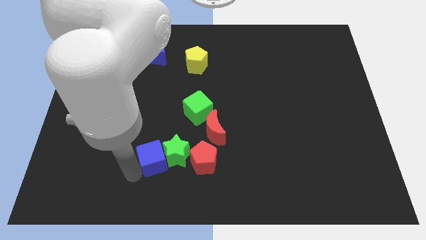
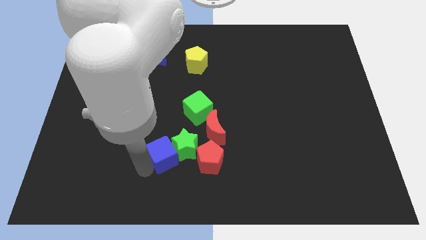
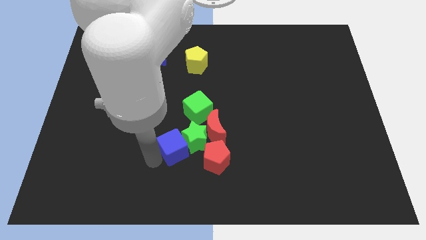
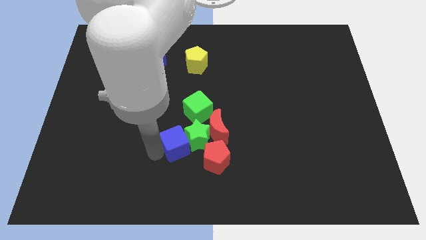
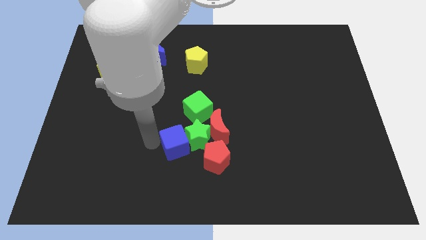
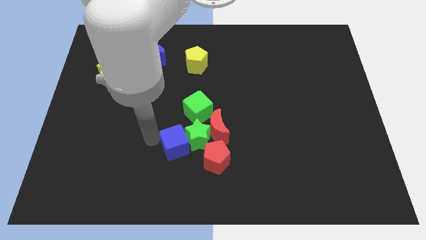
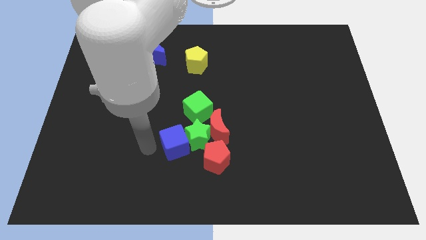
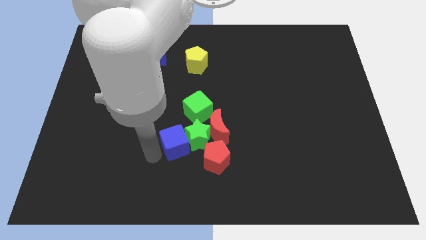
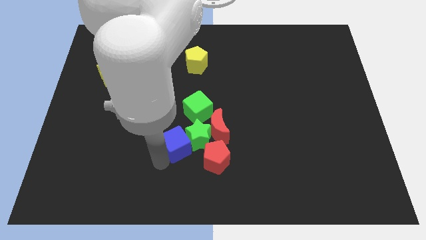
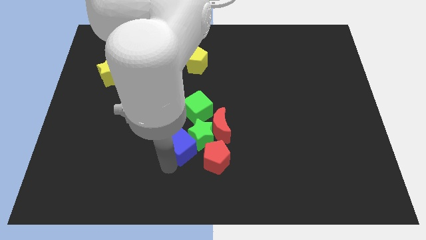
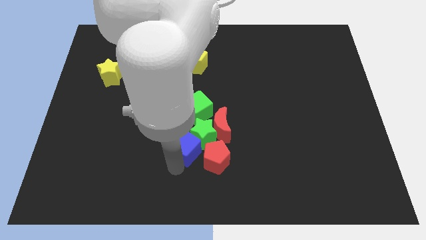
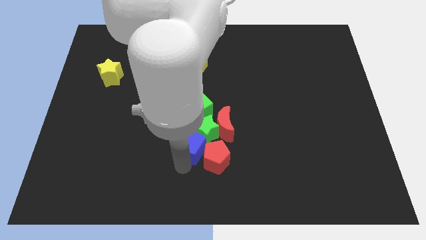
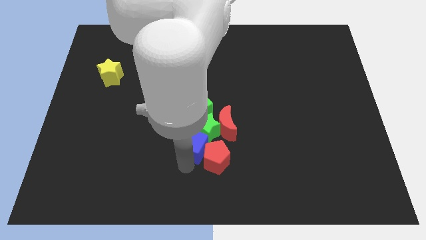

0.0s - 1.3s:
move blue cube into green star

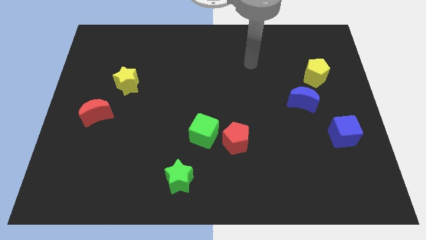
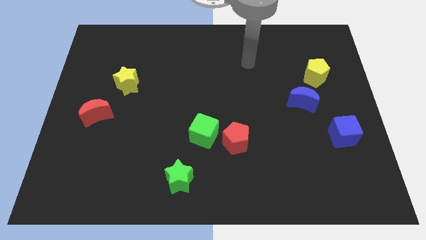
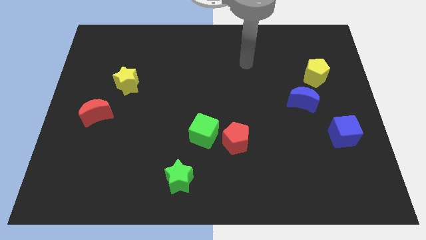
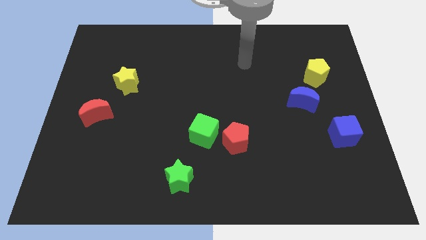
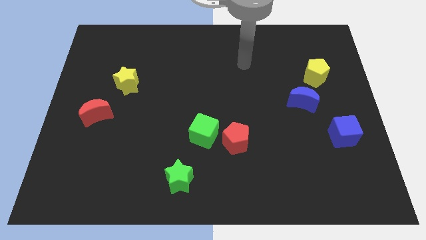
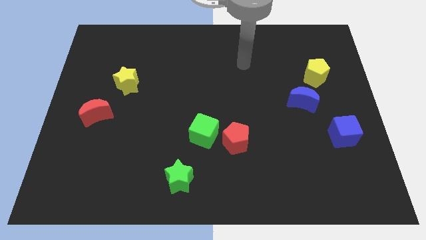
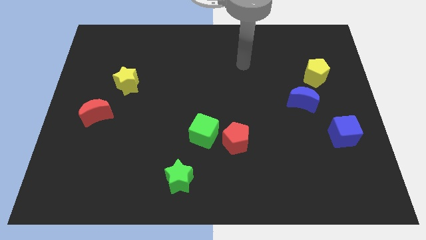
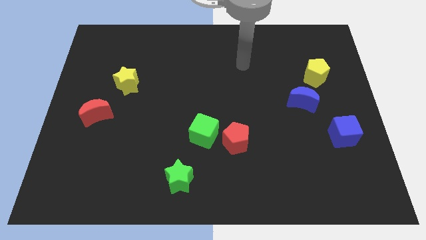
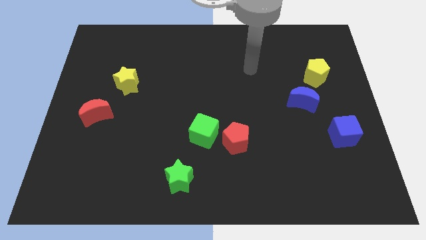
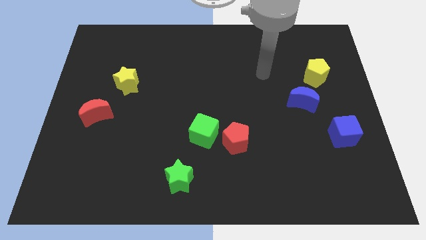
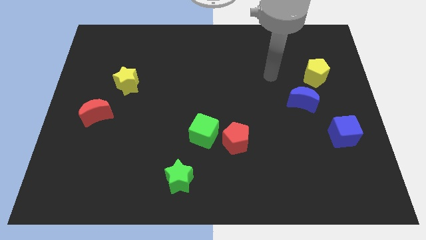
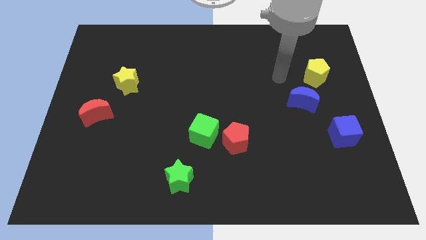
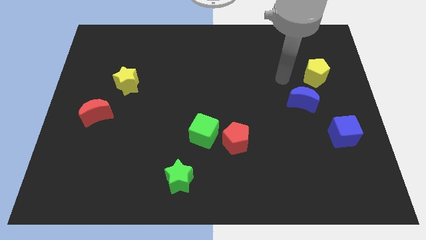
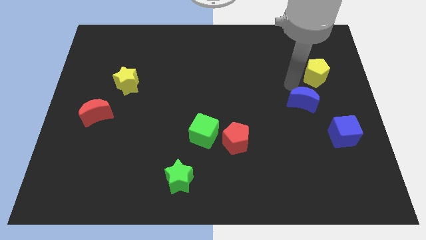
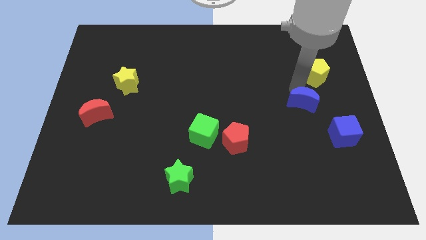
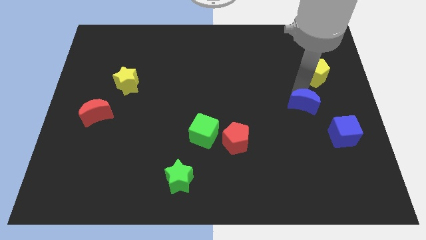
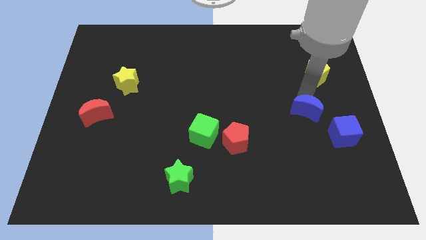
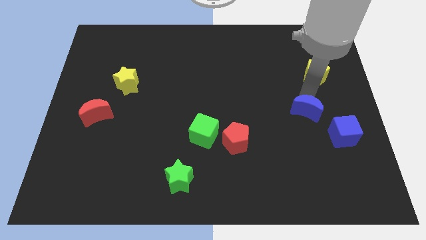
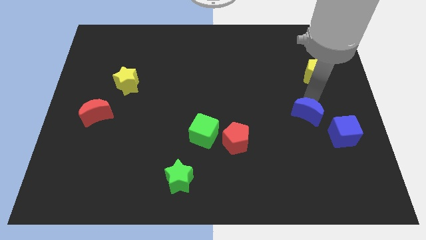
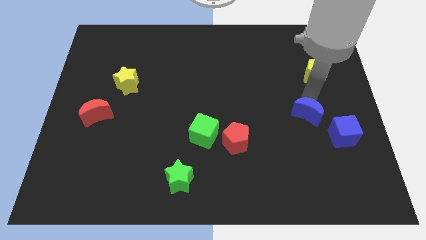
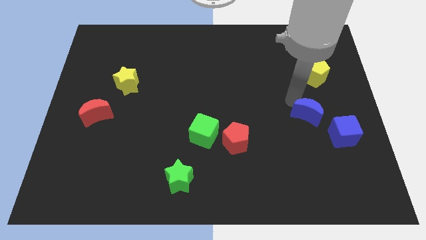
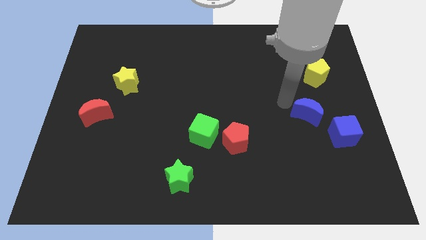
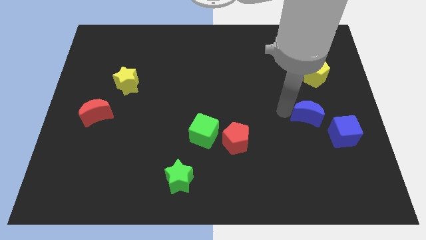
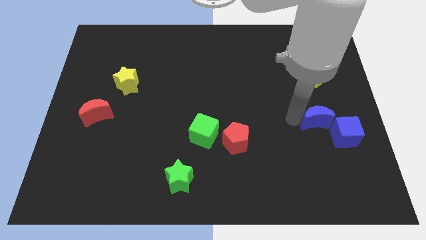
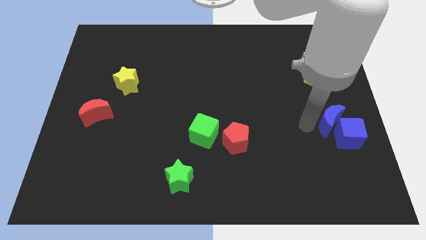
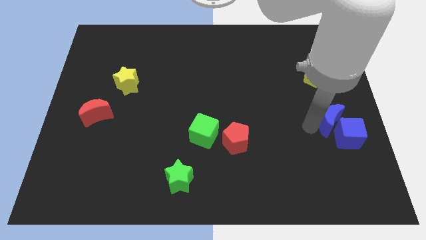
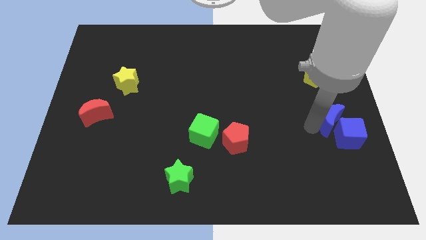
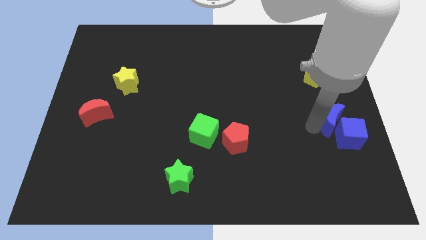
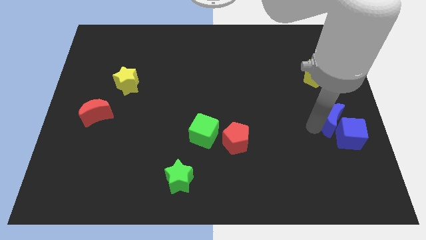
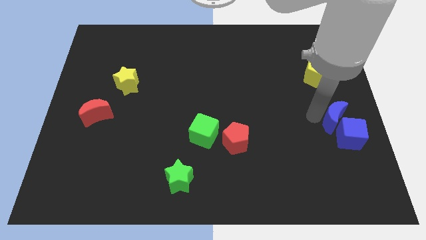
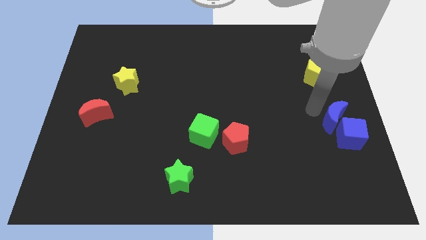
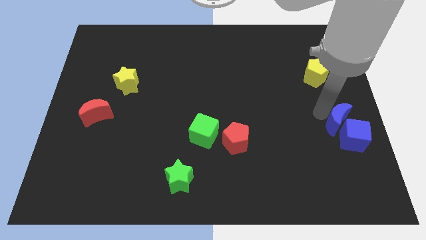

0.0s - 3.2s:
push blue crescent towards blue cube

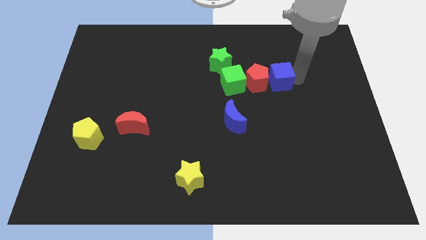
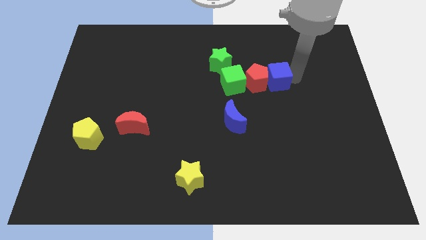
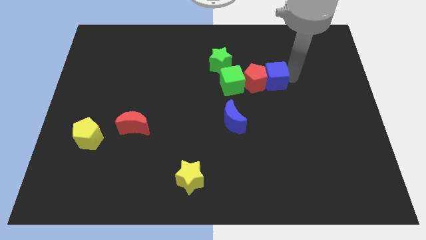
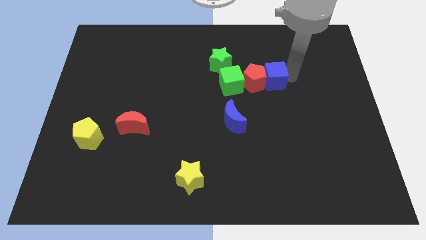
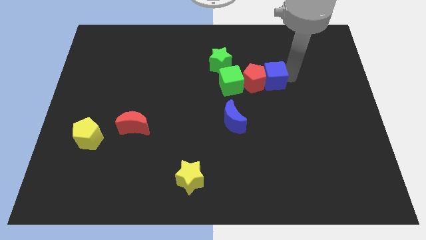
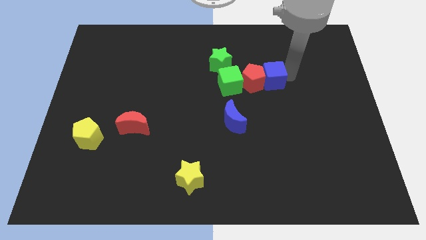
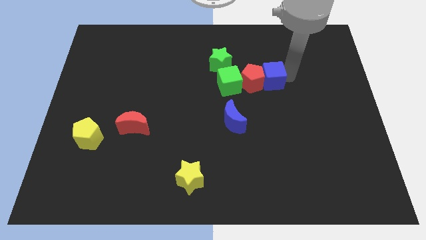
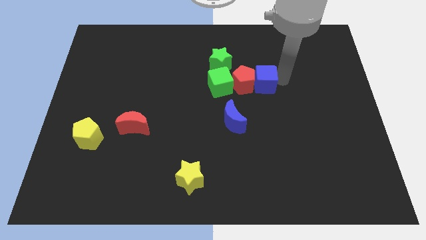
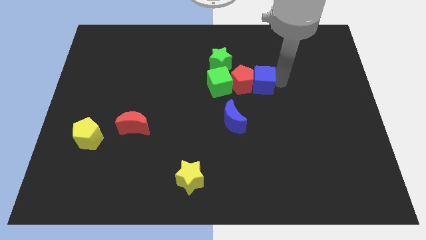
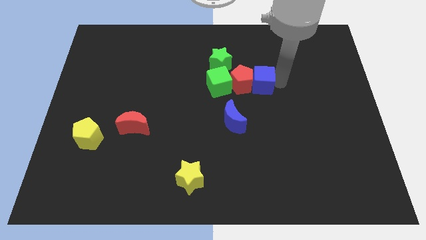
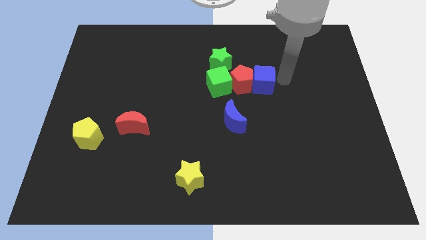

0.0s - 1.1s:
adjust the blue cube in a horizontal line of the board

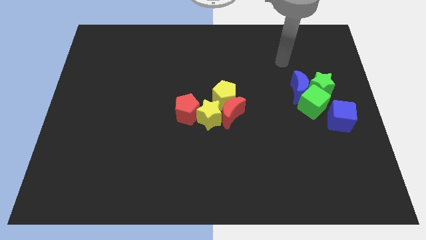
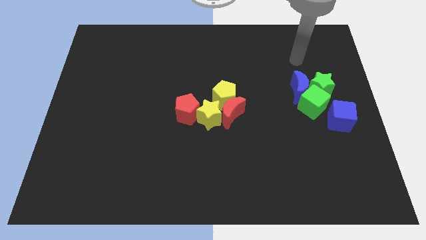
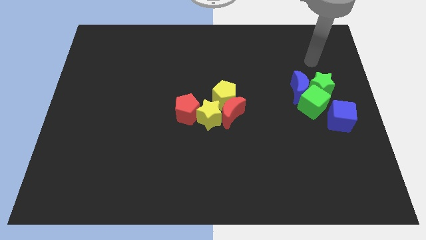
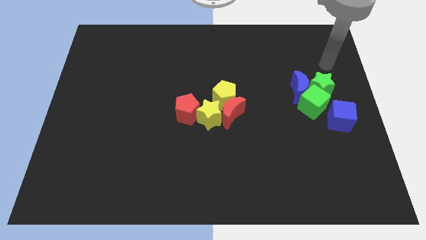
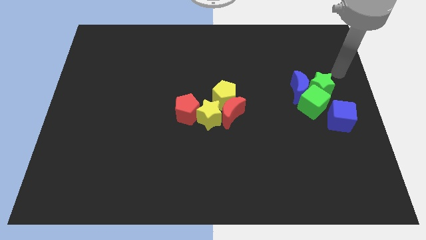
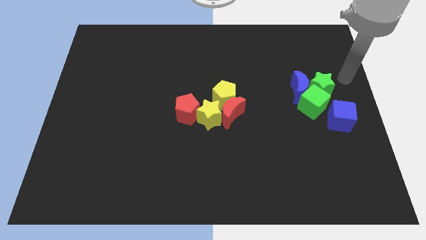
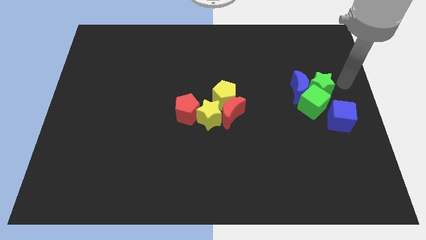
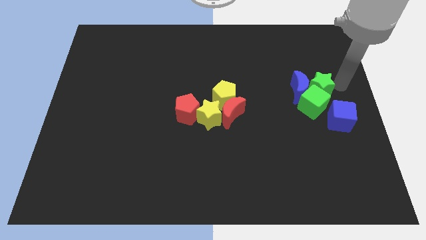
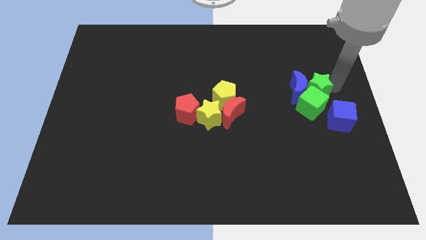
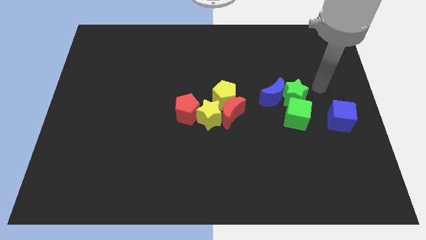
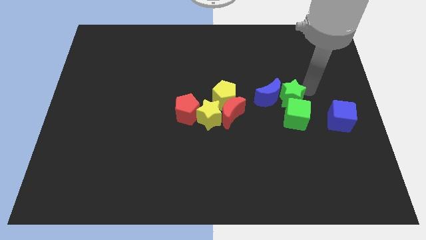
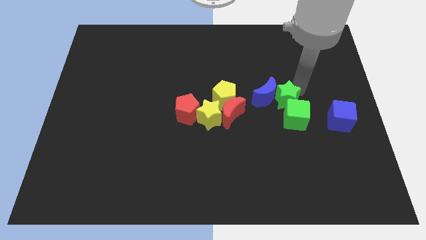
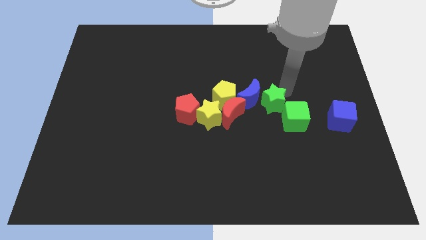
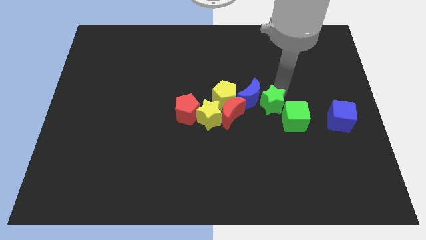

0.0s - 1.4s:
push the blue moon along with the green star into the red moon

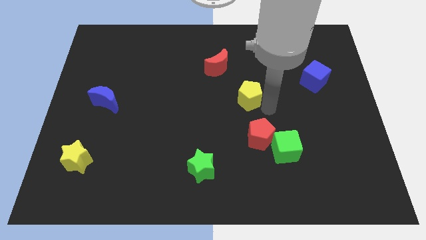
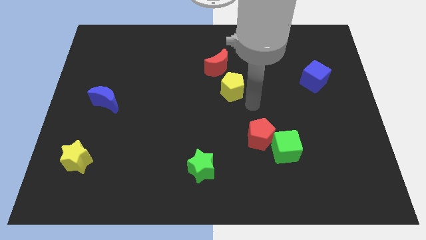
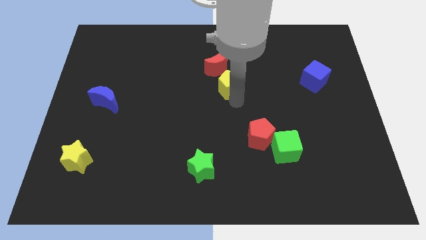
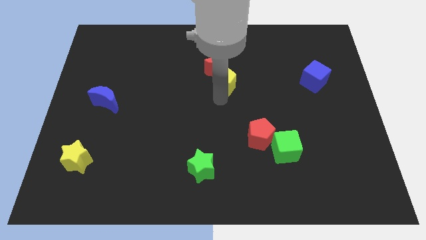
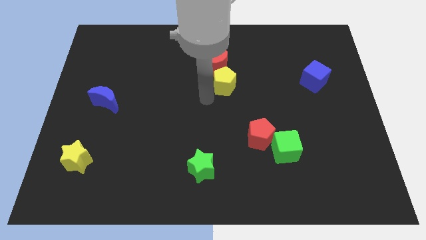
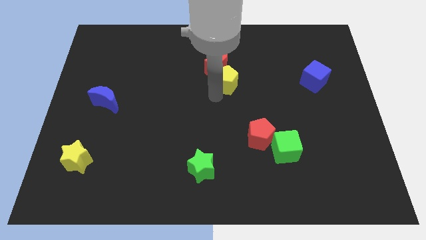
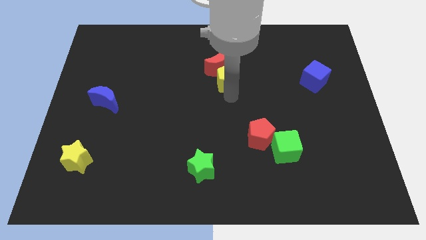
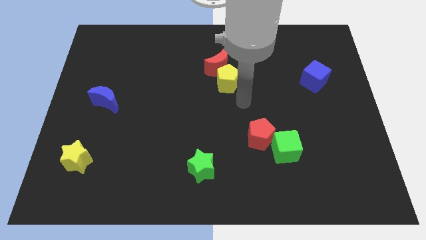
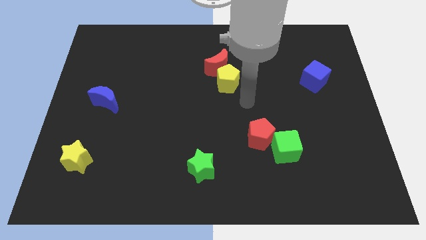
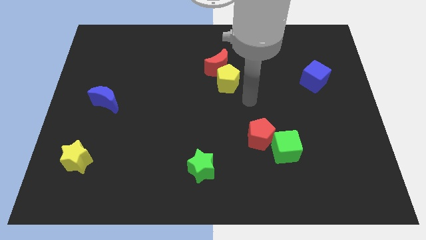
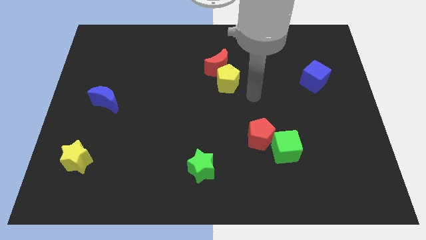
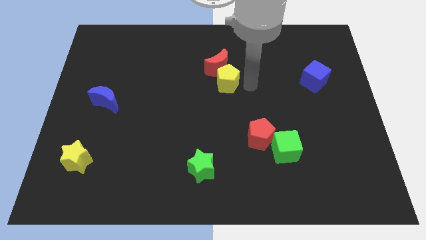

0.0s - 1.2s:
push the yellow pentagon to the bottom of the red crescent

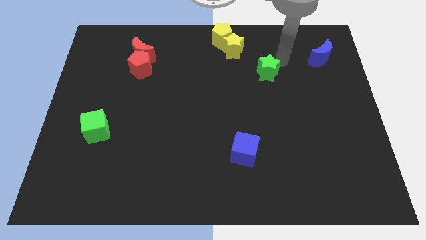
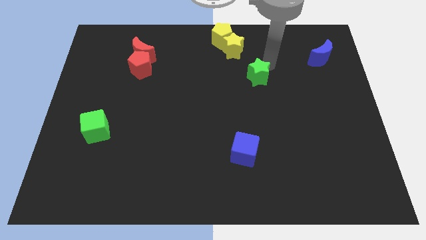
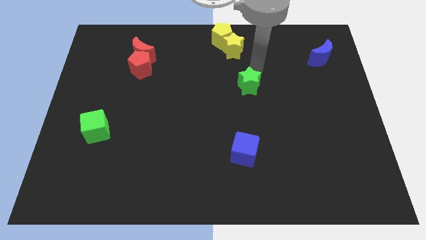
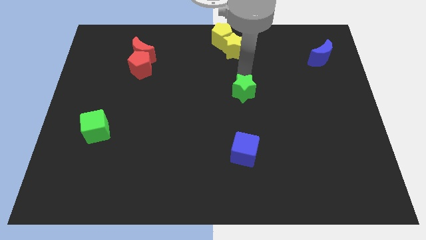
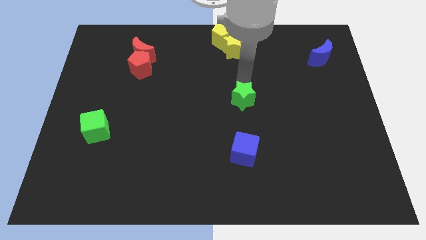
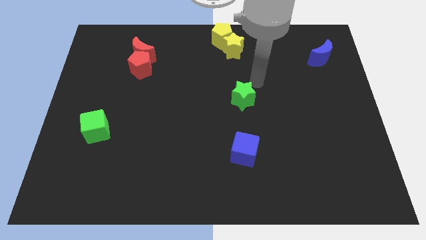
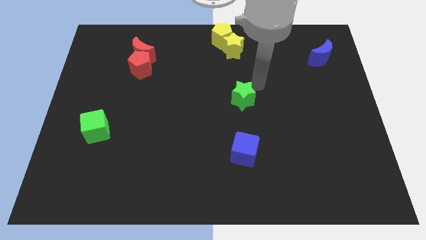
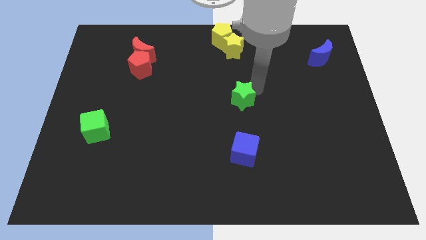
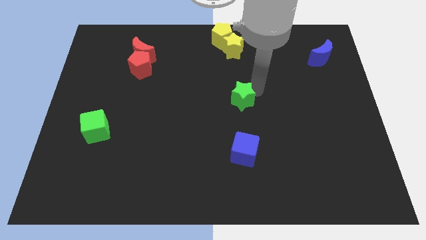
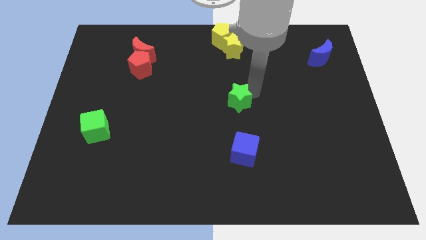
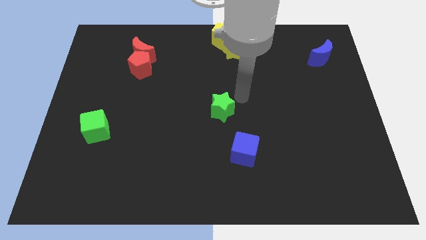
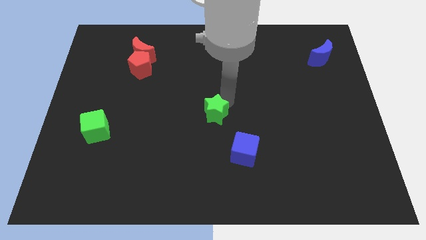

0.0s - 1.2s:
place green star to the center of the board
